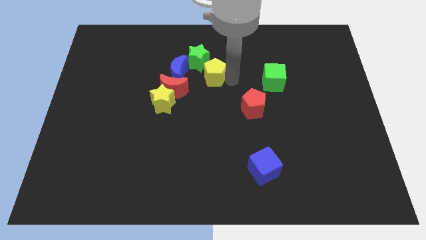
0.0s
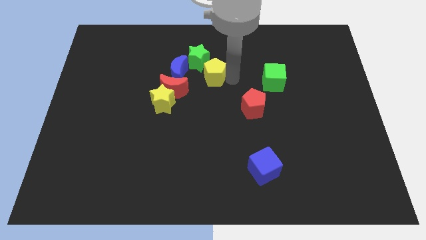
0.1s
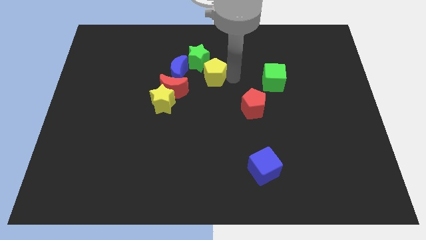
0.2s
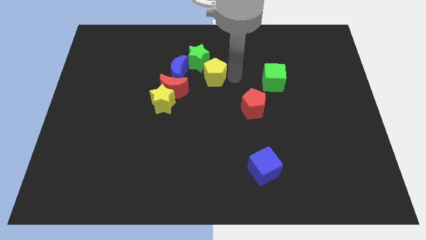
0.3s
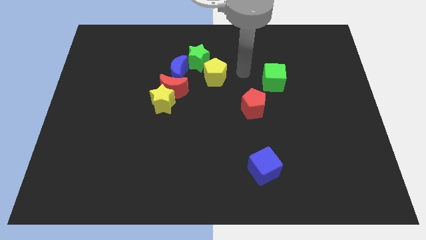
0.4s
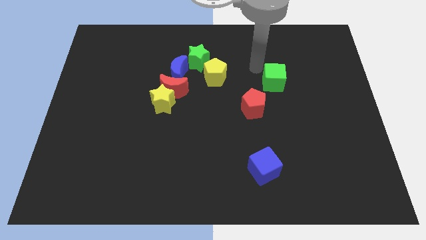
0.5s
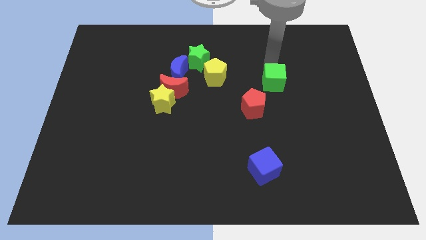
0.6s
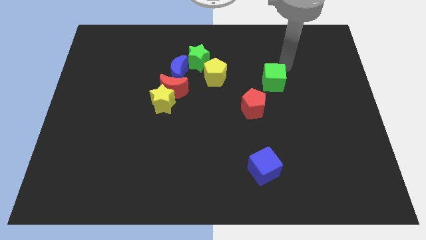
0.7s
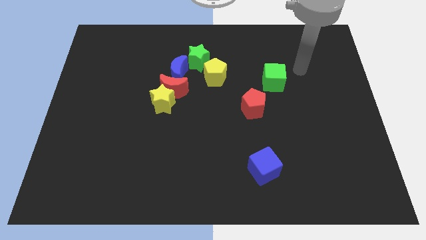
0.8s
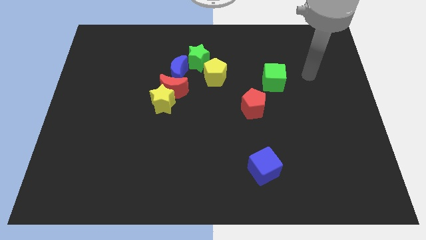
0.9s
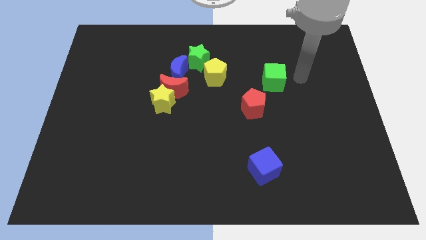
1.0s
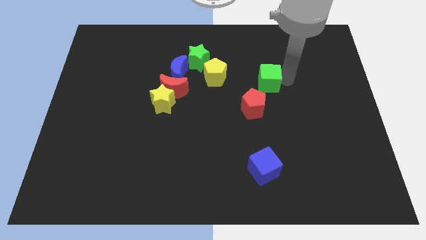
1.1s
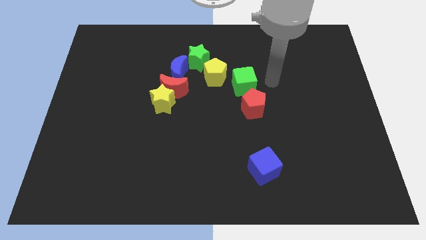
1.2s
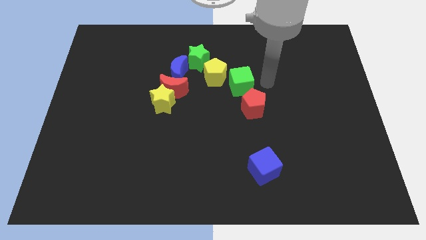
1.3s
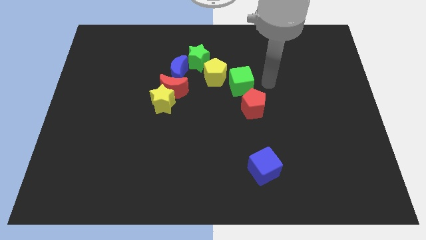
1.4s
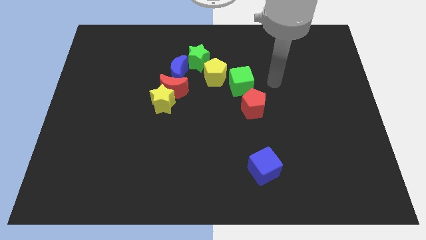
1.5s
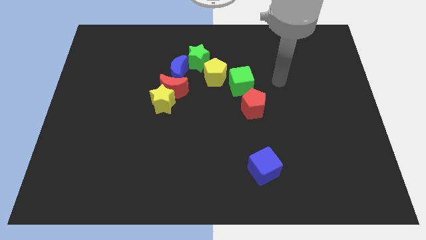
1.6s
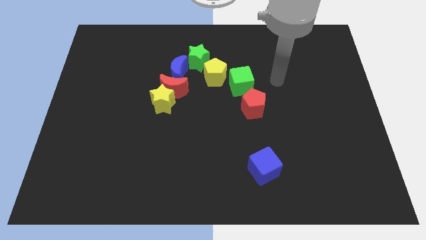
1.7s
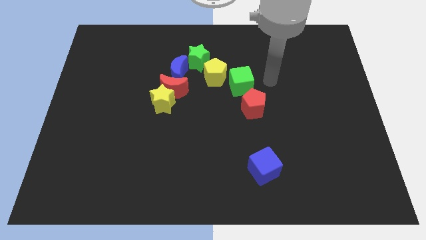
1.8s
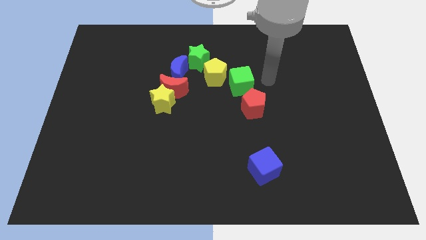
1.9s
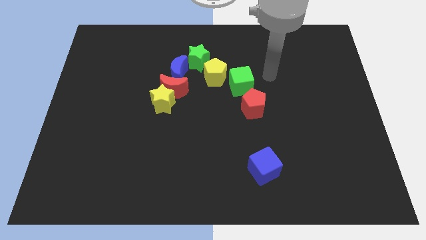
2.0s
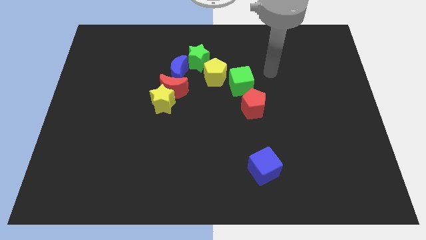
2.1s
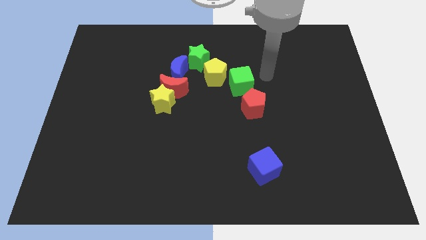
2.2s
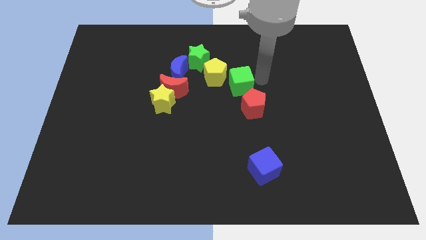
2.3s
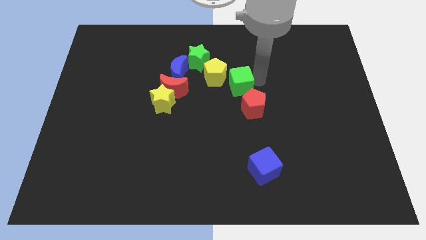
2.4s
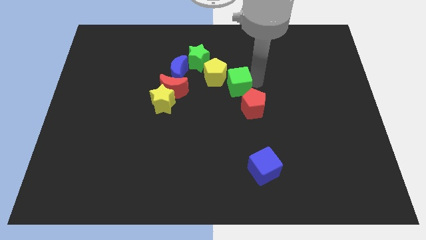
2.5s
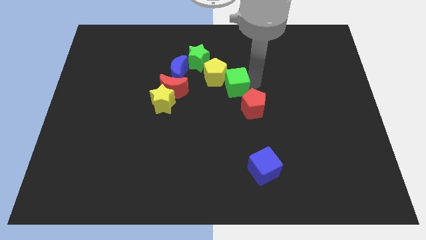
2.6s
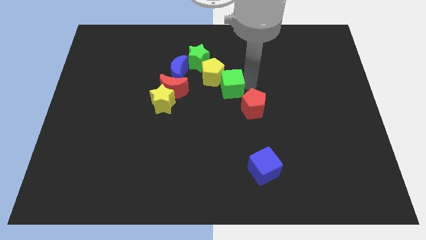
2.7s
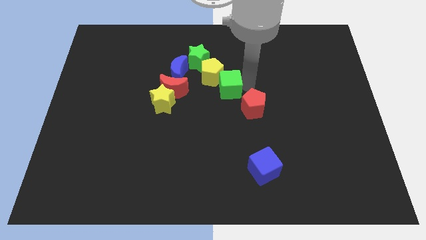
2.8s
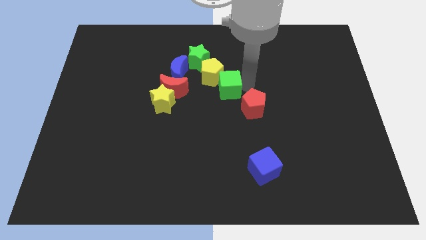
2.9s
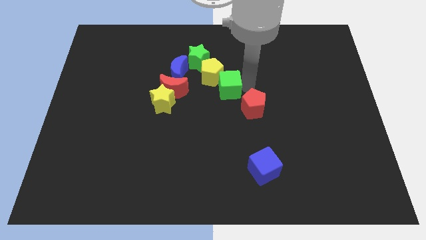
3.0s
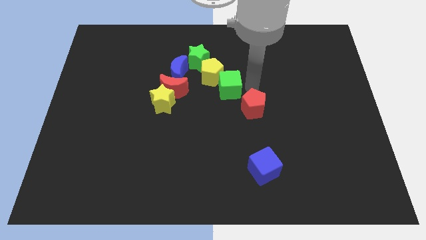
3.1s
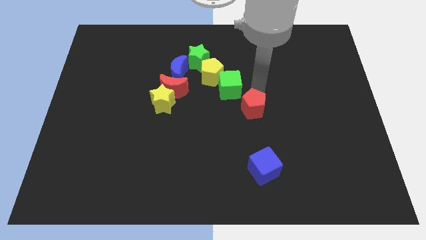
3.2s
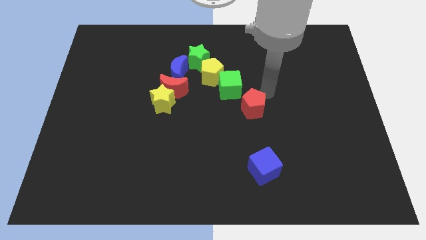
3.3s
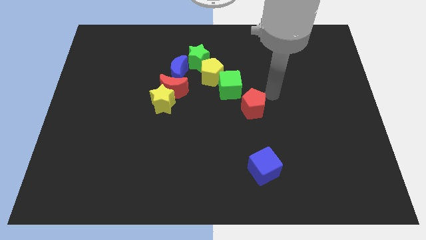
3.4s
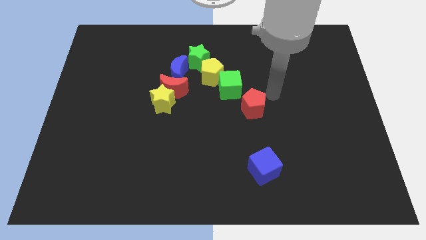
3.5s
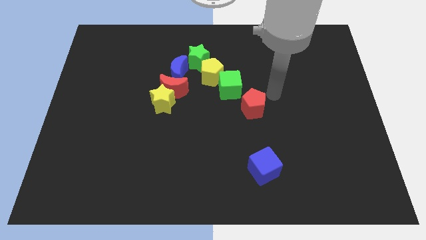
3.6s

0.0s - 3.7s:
push the green cube to the bottom right of the yellow pentagon

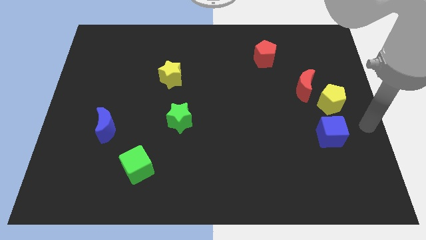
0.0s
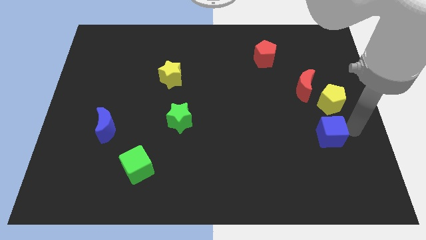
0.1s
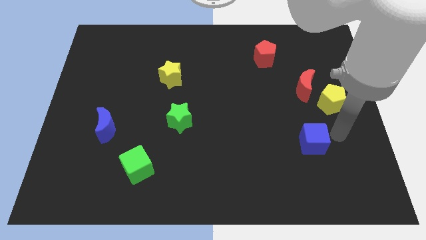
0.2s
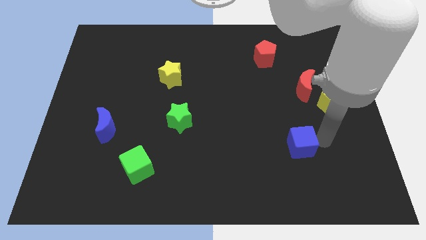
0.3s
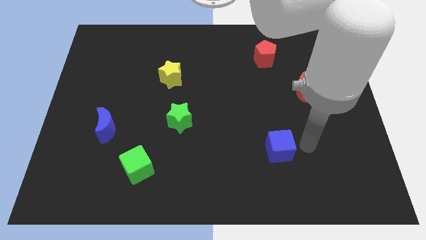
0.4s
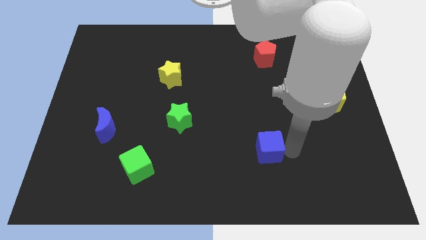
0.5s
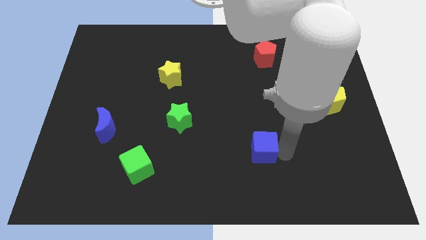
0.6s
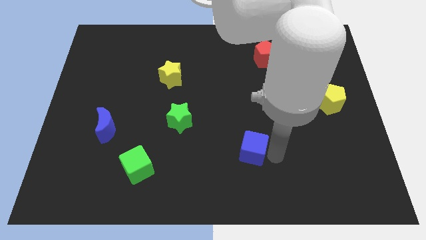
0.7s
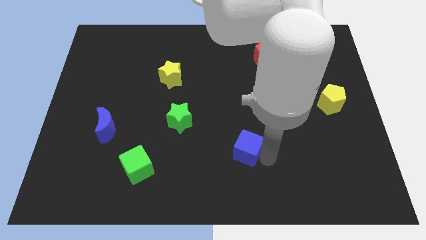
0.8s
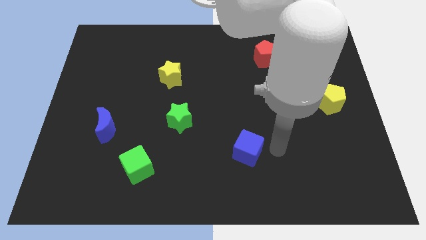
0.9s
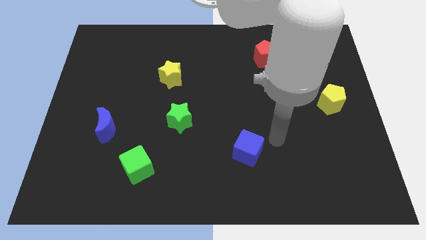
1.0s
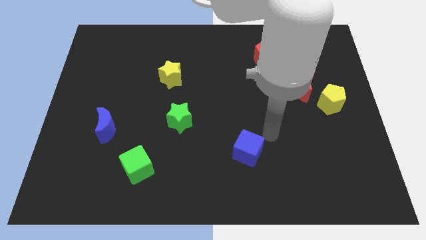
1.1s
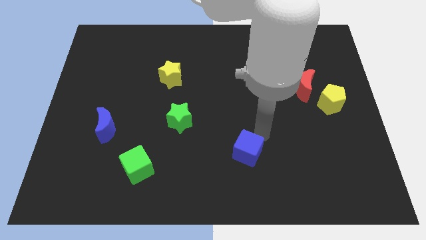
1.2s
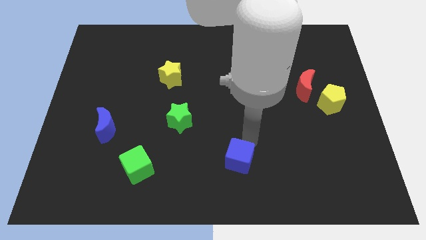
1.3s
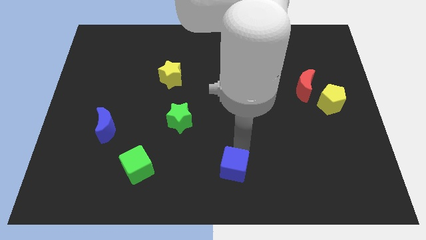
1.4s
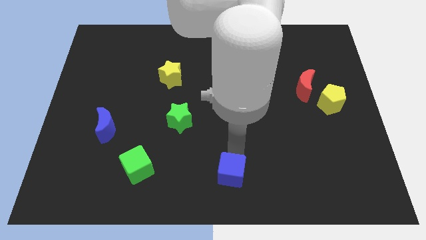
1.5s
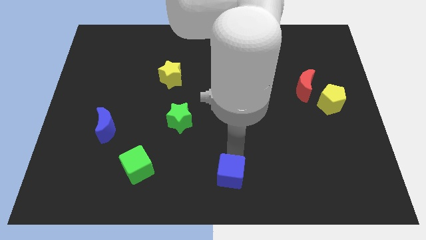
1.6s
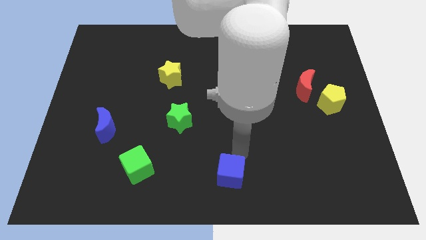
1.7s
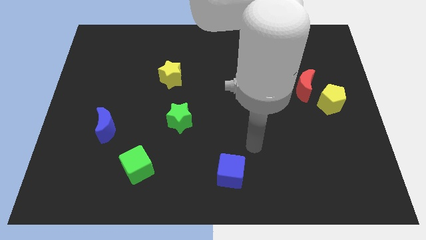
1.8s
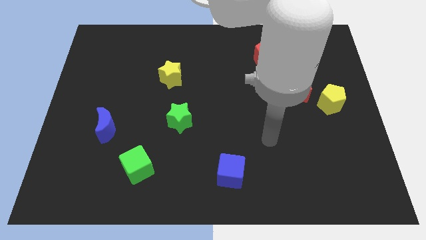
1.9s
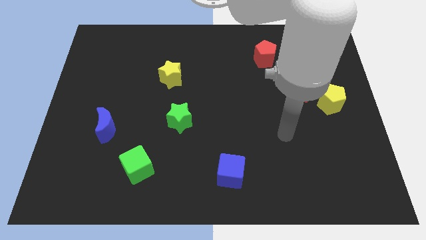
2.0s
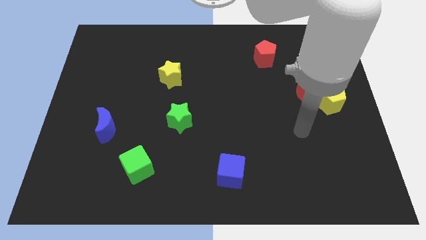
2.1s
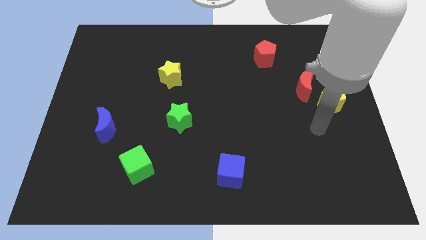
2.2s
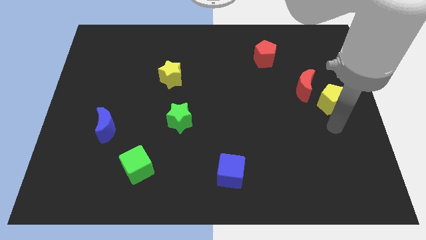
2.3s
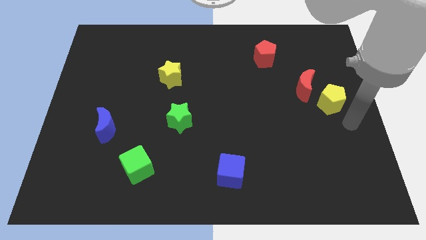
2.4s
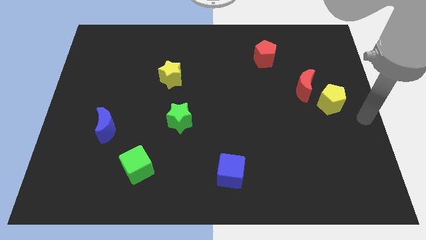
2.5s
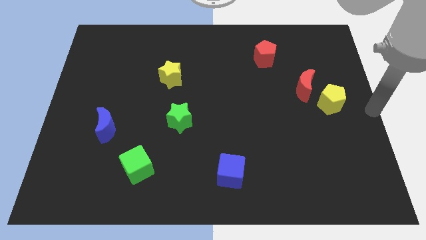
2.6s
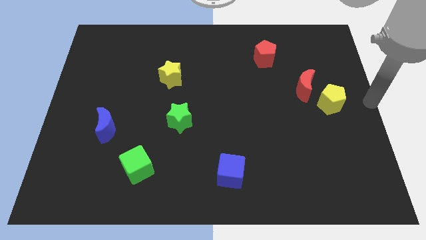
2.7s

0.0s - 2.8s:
move the blue cube to the right side of the green cube

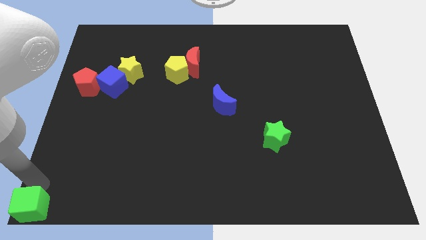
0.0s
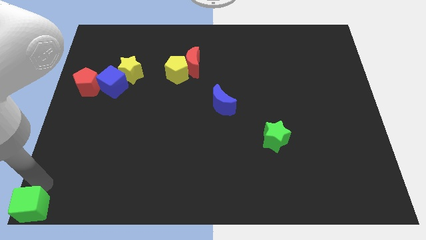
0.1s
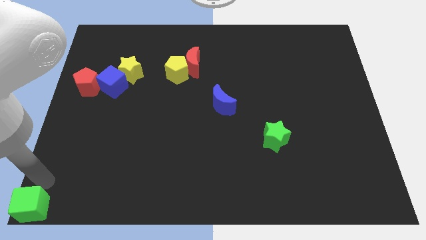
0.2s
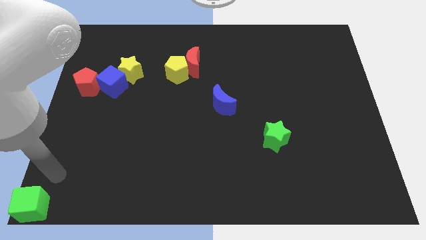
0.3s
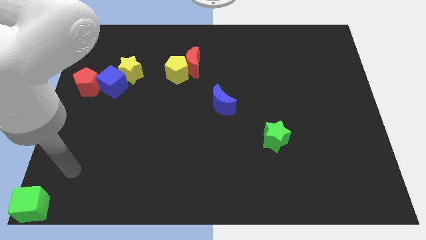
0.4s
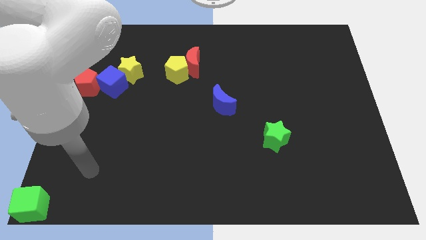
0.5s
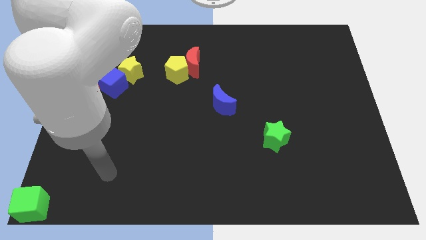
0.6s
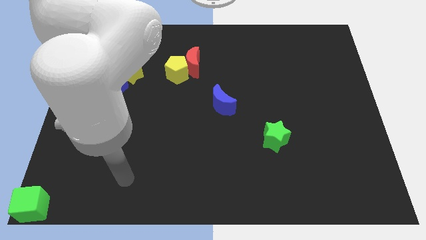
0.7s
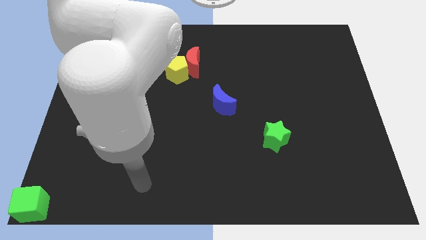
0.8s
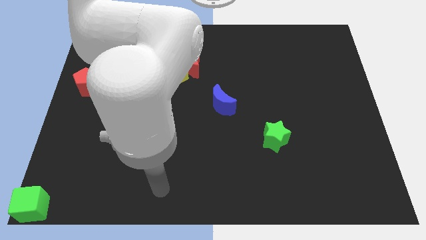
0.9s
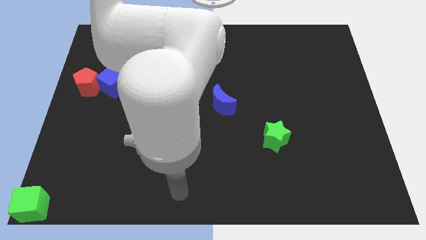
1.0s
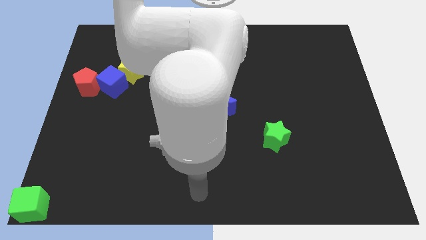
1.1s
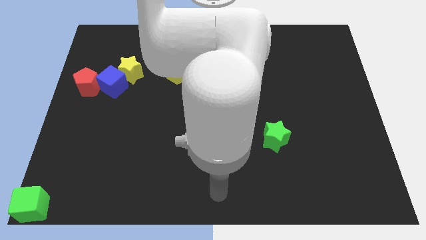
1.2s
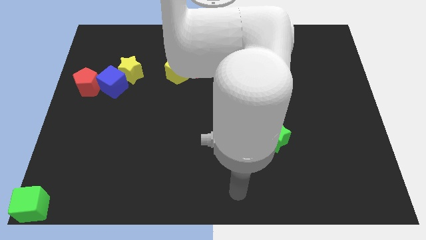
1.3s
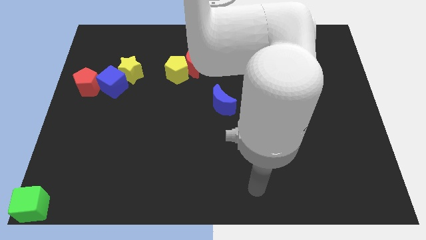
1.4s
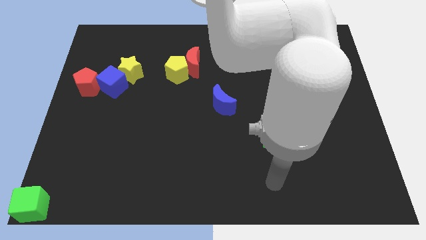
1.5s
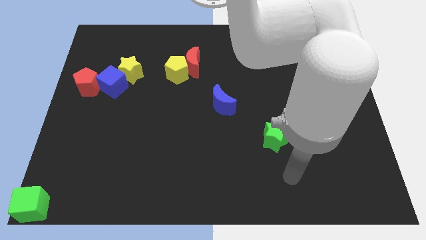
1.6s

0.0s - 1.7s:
move the hand at the bottom of the green star vertically

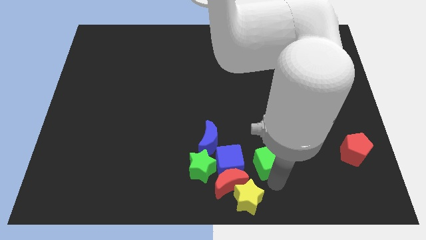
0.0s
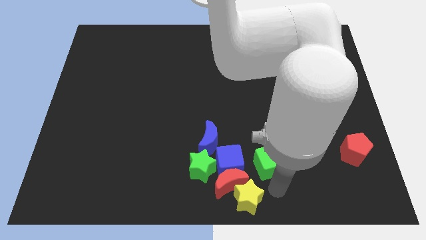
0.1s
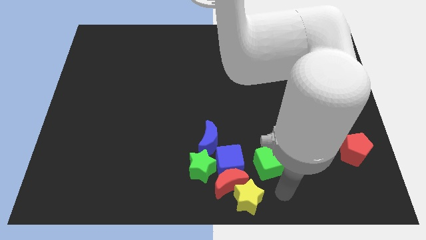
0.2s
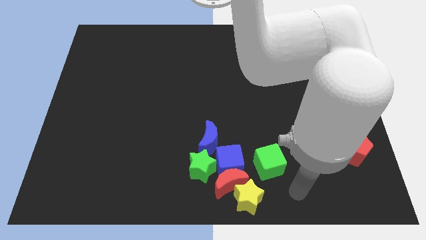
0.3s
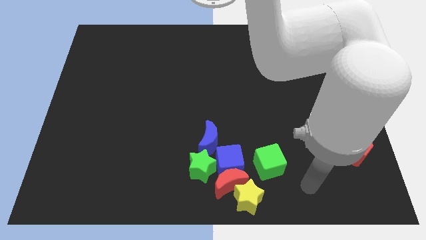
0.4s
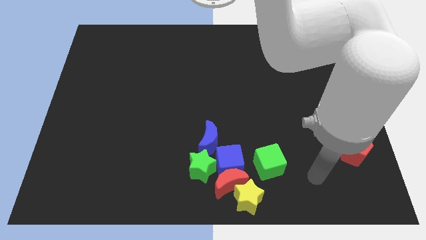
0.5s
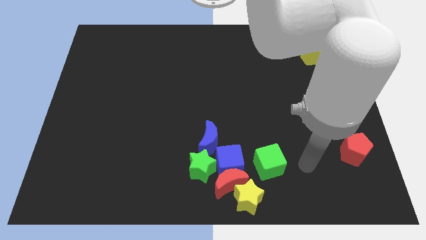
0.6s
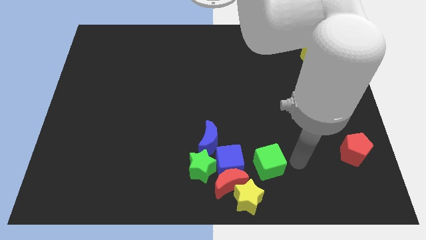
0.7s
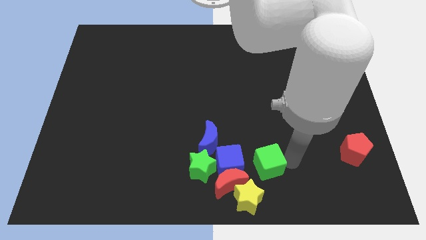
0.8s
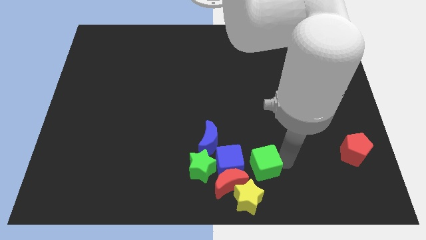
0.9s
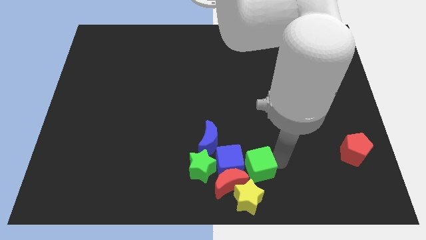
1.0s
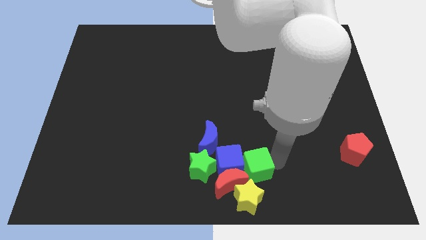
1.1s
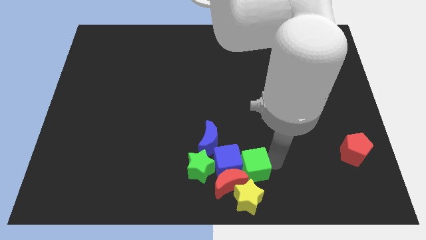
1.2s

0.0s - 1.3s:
move the green cube into the group of blocks
